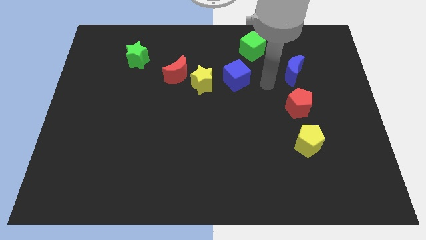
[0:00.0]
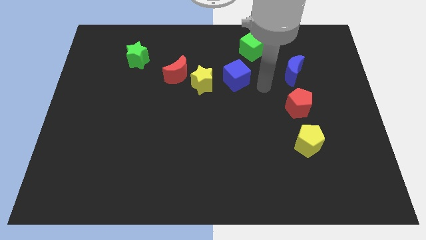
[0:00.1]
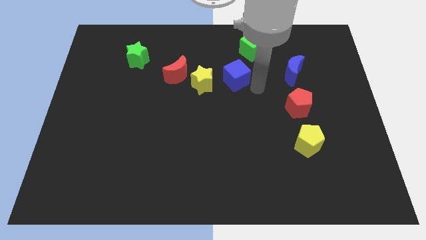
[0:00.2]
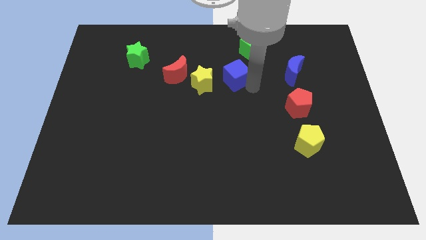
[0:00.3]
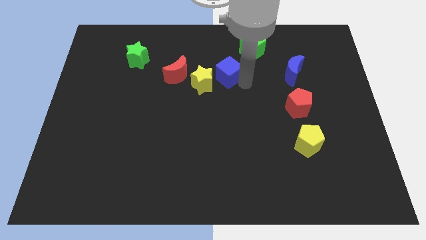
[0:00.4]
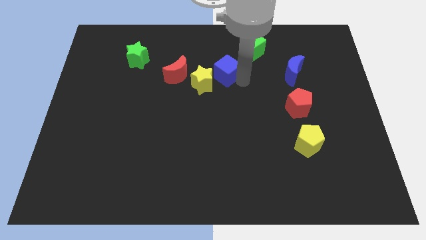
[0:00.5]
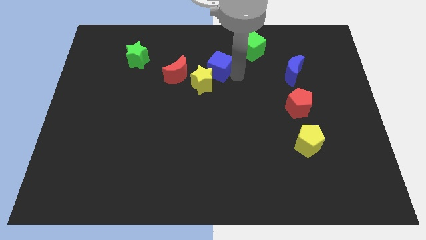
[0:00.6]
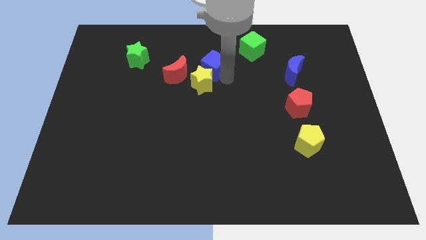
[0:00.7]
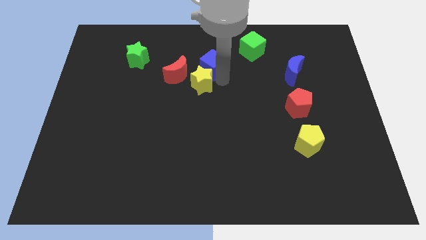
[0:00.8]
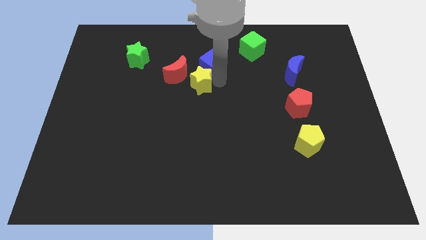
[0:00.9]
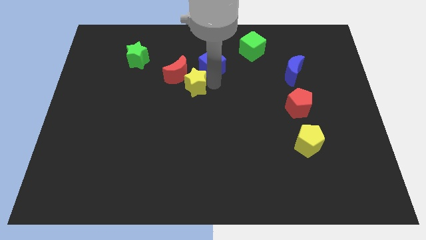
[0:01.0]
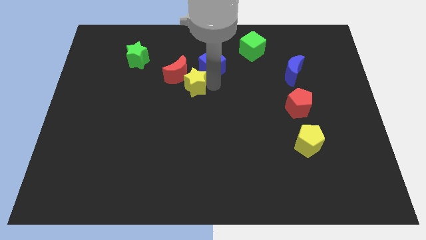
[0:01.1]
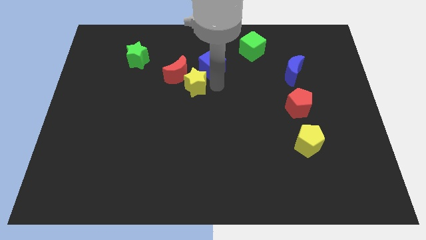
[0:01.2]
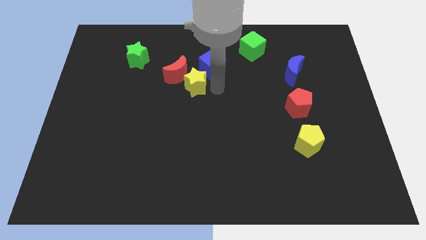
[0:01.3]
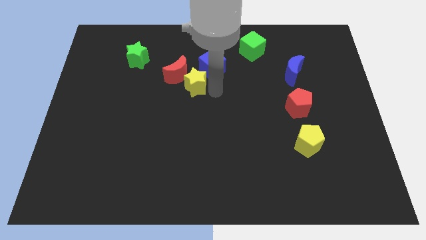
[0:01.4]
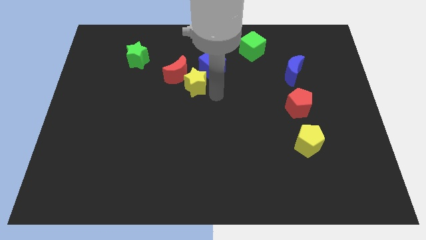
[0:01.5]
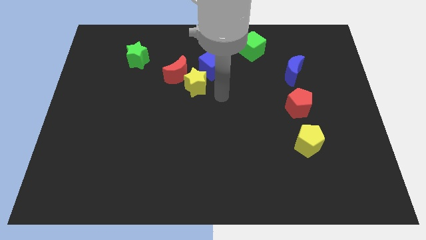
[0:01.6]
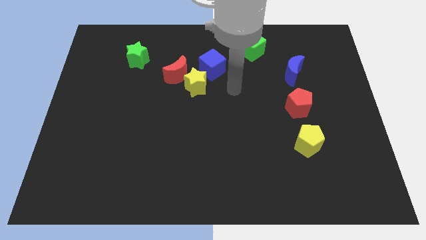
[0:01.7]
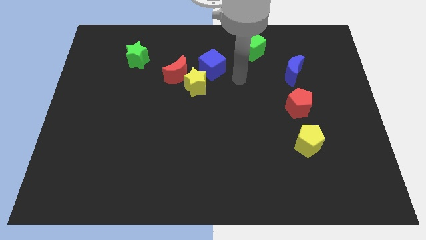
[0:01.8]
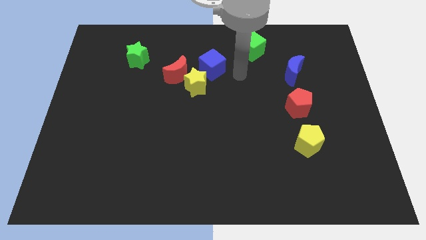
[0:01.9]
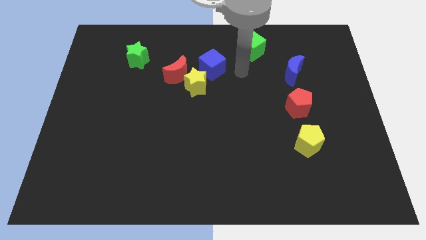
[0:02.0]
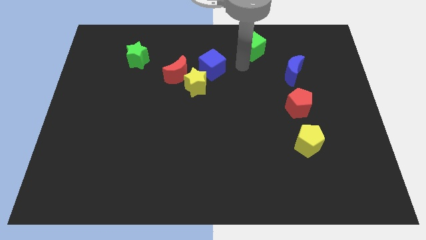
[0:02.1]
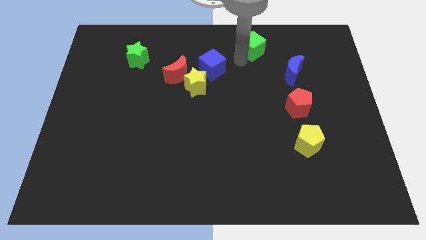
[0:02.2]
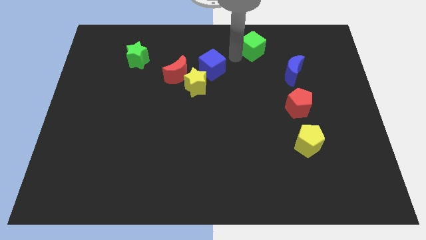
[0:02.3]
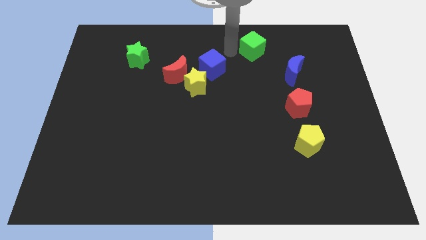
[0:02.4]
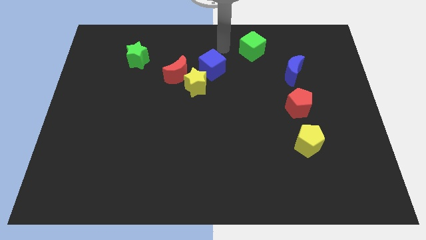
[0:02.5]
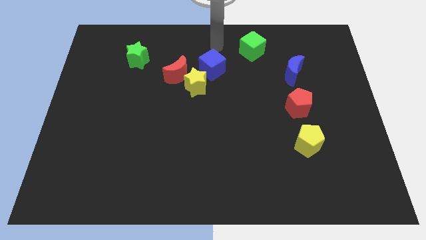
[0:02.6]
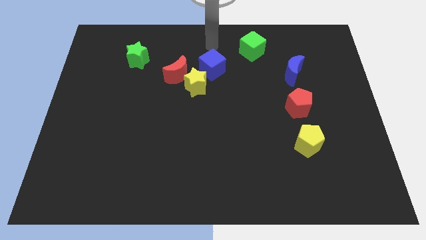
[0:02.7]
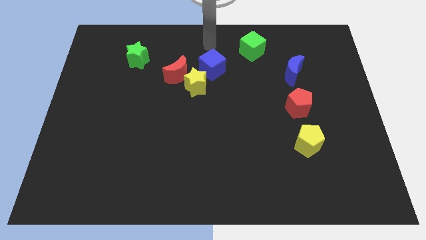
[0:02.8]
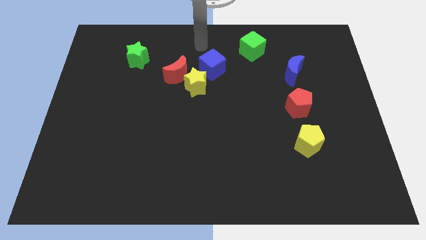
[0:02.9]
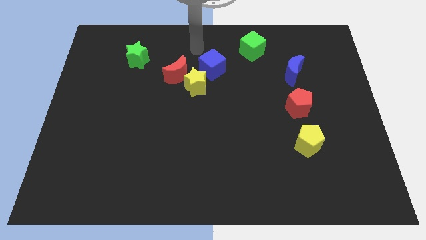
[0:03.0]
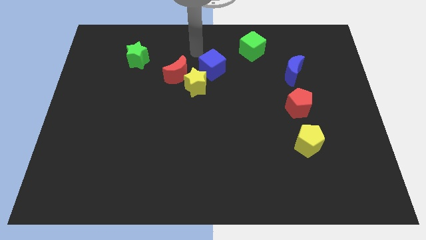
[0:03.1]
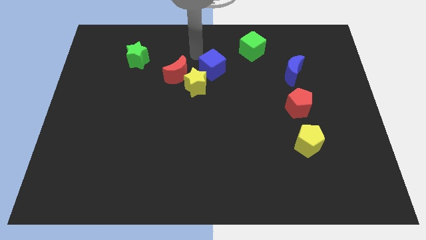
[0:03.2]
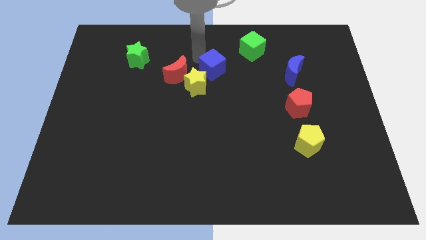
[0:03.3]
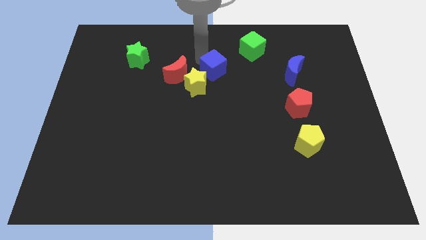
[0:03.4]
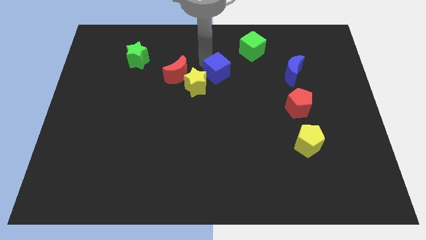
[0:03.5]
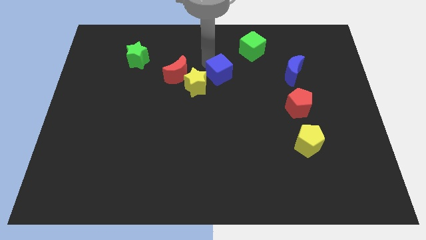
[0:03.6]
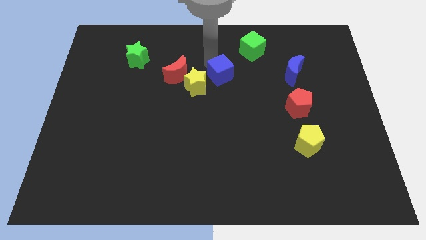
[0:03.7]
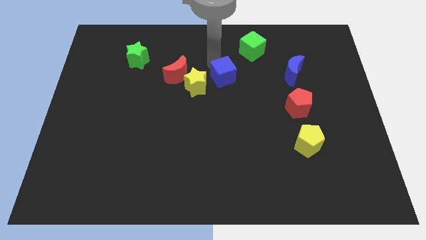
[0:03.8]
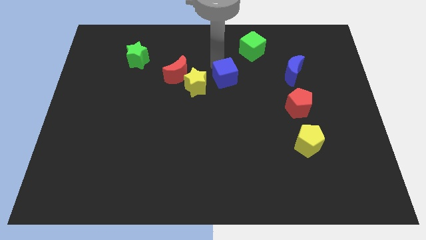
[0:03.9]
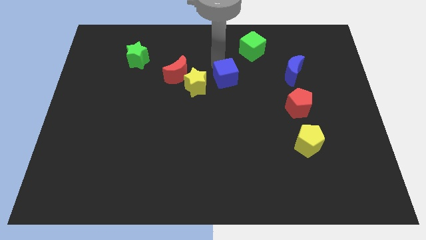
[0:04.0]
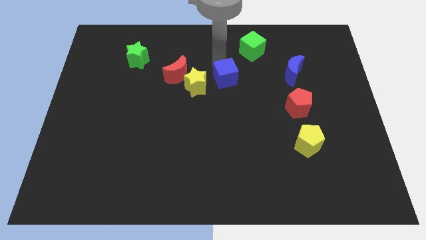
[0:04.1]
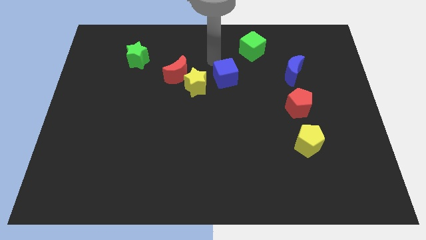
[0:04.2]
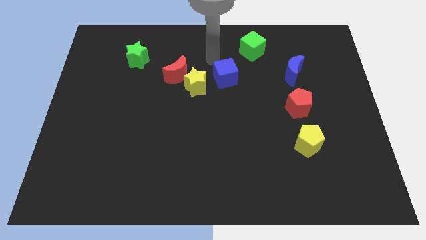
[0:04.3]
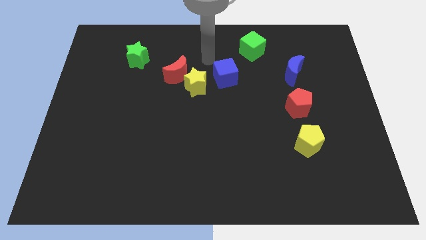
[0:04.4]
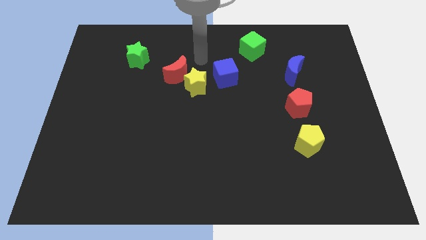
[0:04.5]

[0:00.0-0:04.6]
push the blue cube diagonally left below the green cube

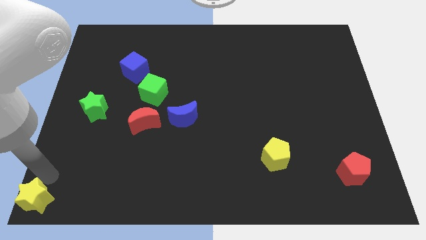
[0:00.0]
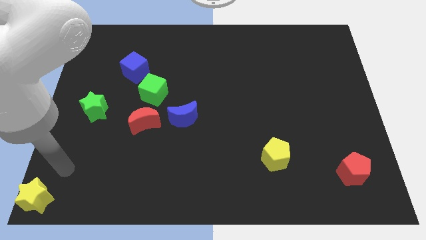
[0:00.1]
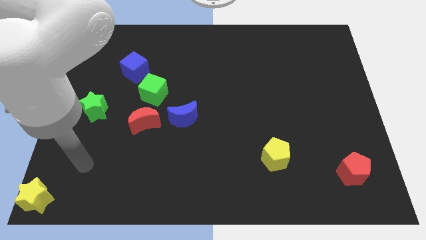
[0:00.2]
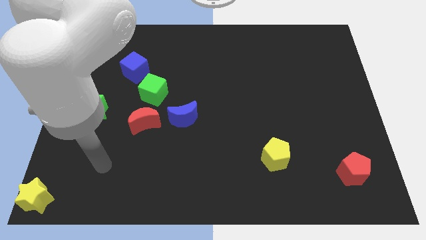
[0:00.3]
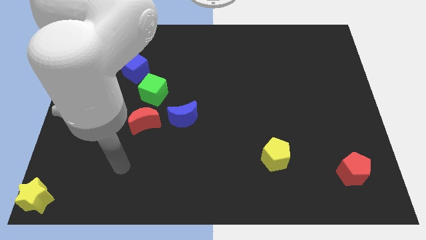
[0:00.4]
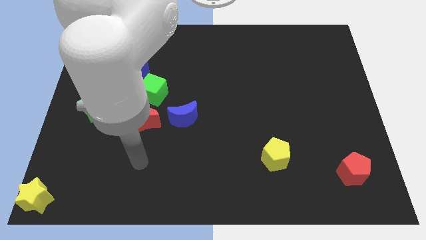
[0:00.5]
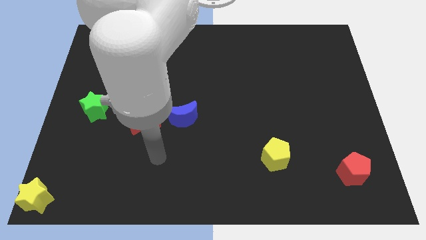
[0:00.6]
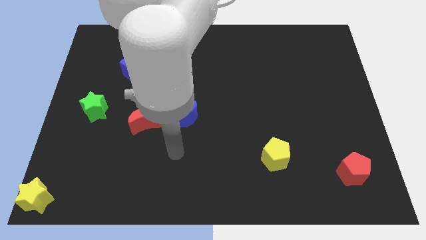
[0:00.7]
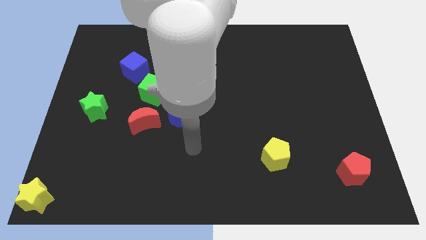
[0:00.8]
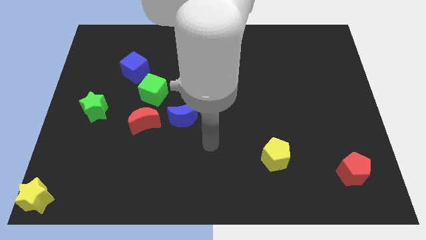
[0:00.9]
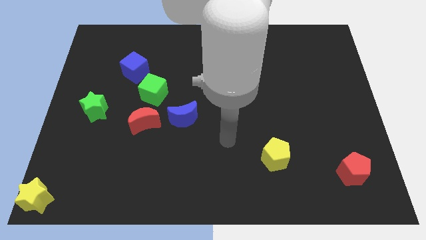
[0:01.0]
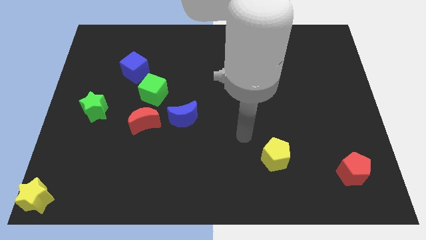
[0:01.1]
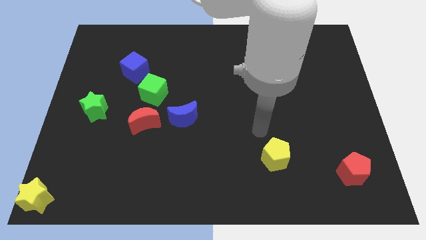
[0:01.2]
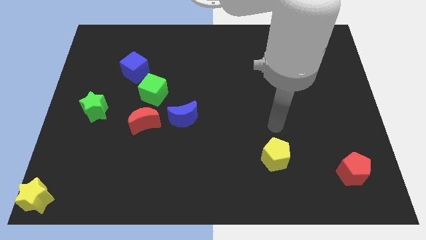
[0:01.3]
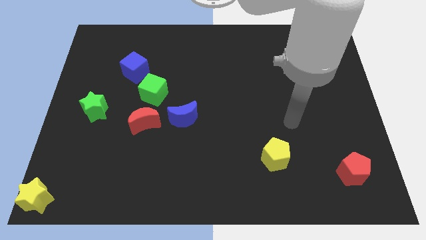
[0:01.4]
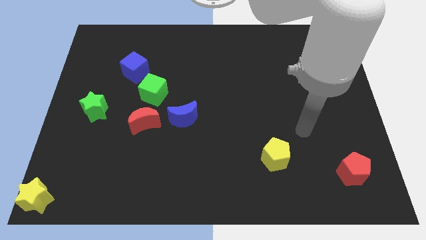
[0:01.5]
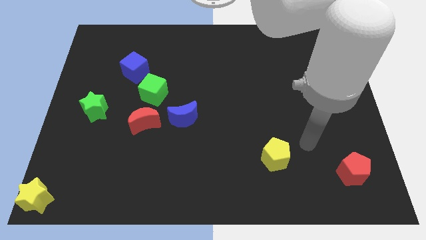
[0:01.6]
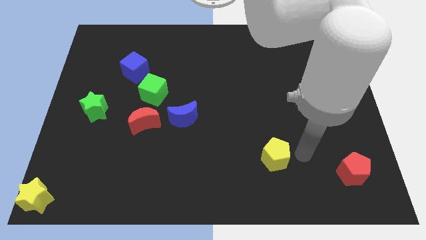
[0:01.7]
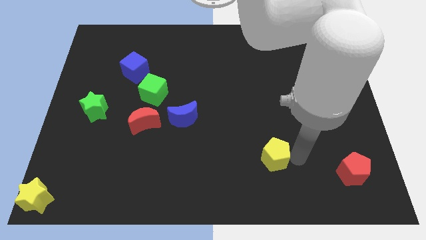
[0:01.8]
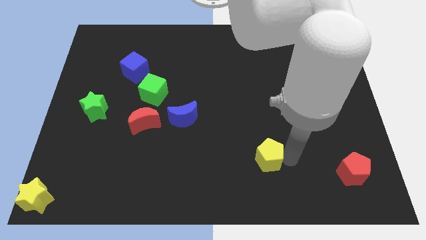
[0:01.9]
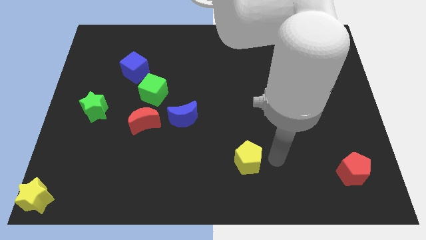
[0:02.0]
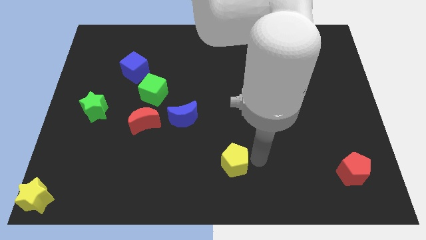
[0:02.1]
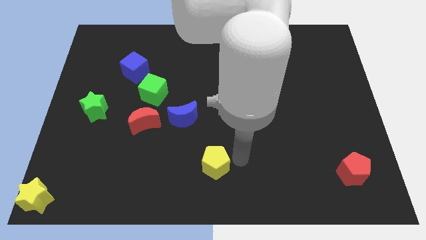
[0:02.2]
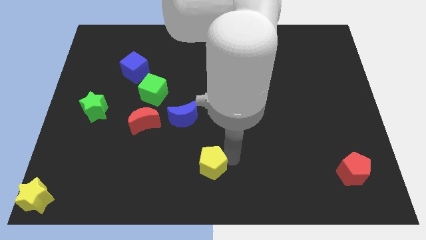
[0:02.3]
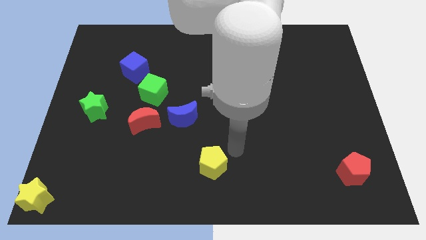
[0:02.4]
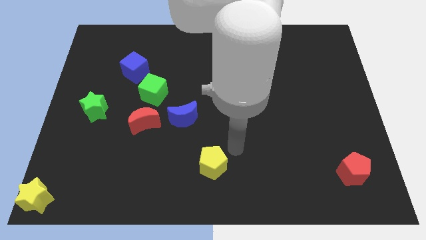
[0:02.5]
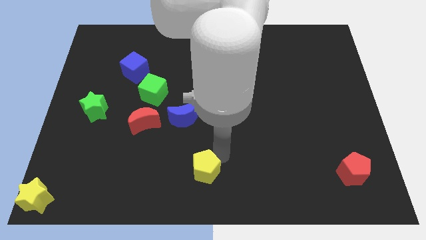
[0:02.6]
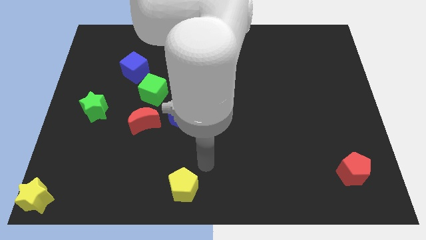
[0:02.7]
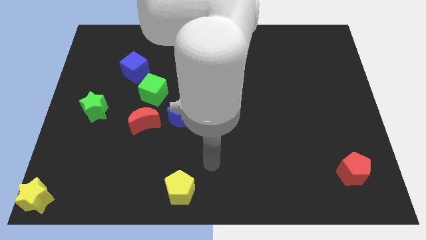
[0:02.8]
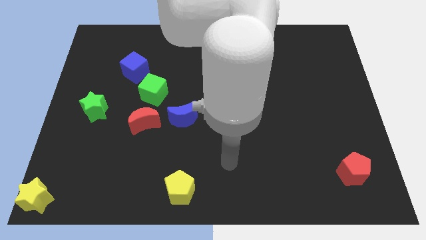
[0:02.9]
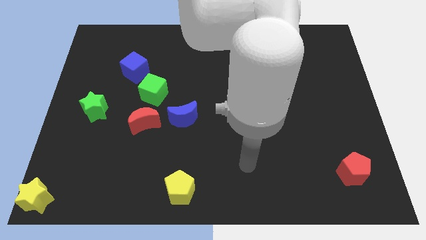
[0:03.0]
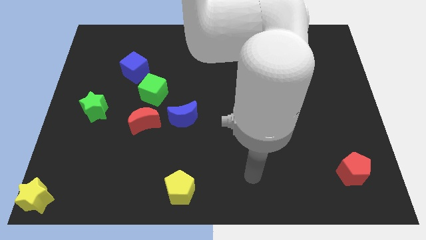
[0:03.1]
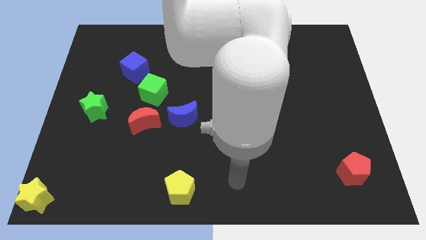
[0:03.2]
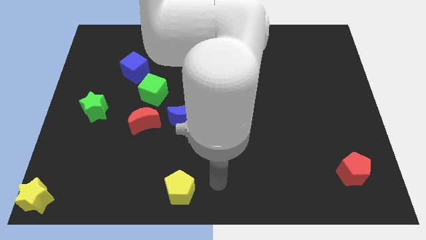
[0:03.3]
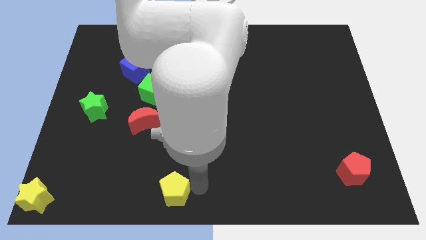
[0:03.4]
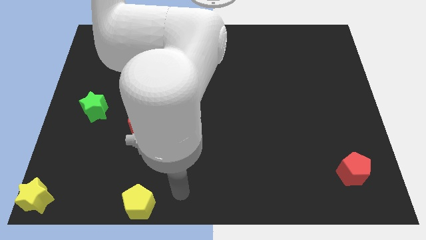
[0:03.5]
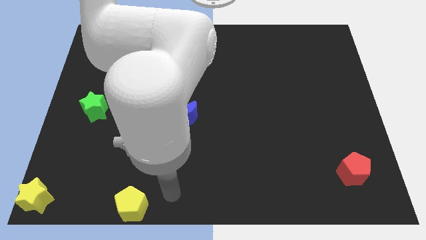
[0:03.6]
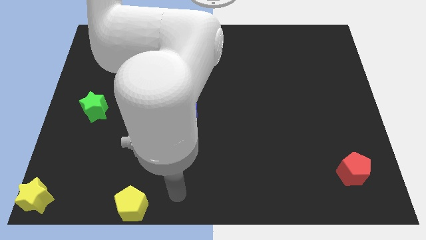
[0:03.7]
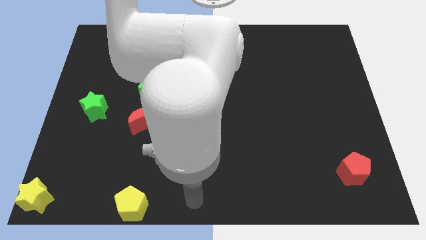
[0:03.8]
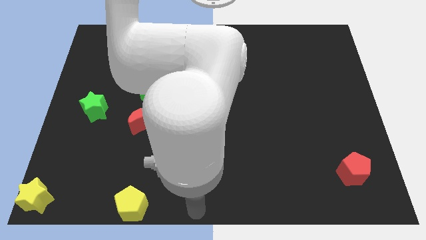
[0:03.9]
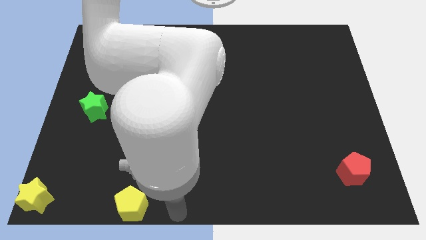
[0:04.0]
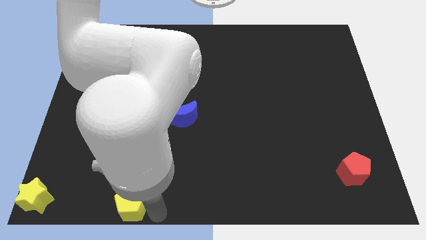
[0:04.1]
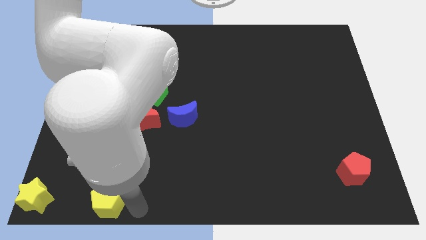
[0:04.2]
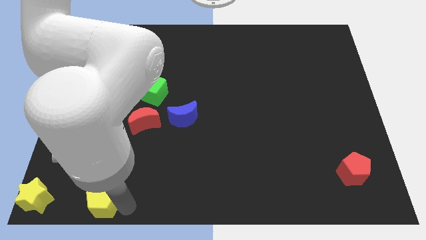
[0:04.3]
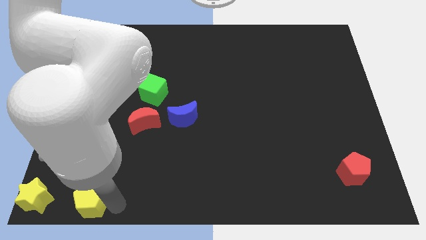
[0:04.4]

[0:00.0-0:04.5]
move the yellow pentagon towards the bottom left of the board
